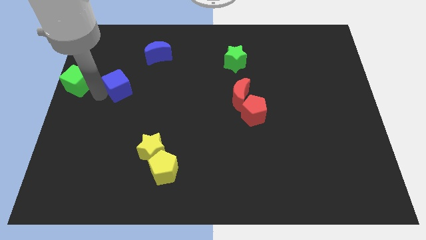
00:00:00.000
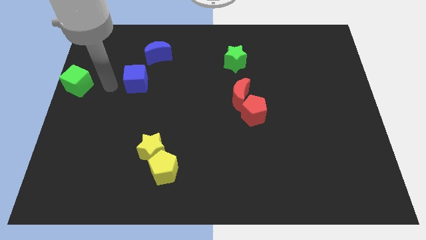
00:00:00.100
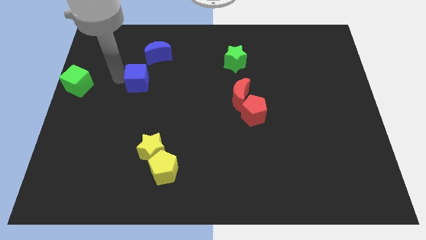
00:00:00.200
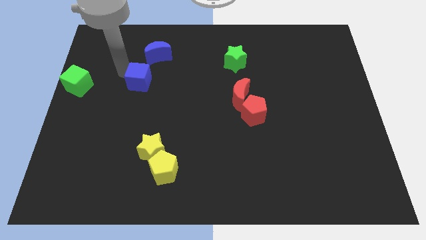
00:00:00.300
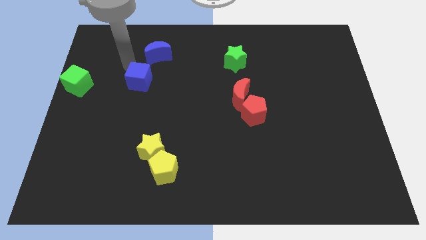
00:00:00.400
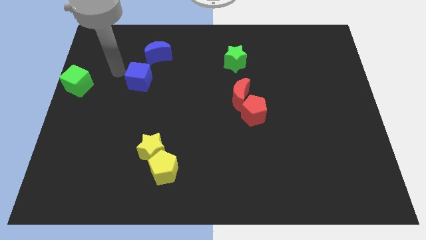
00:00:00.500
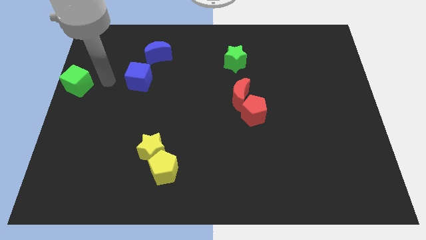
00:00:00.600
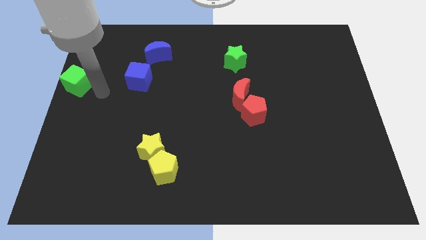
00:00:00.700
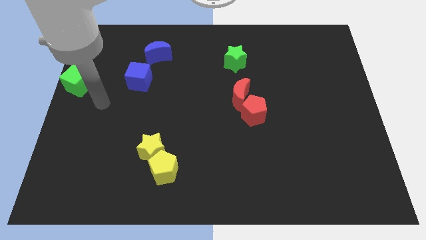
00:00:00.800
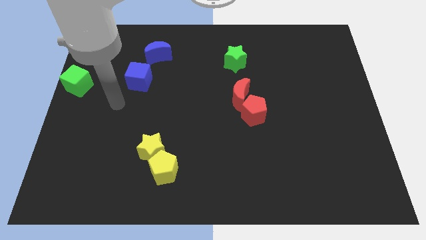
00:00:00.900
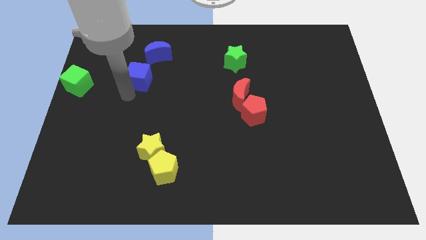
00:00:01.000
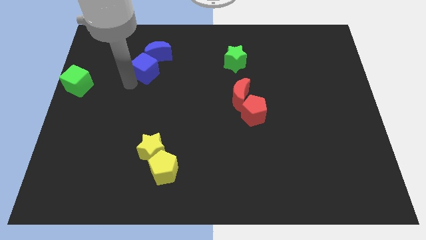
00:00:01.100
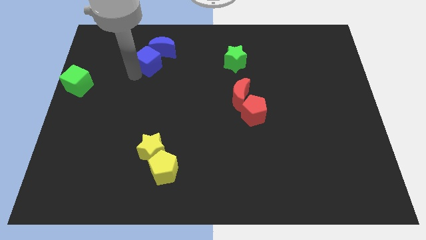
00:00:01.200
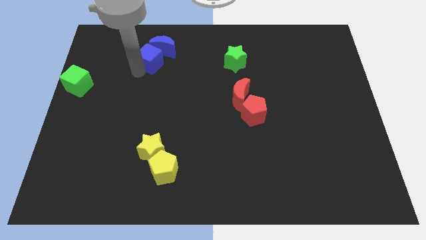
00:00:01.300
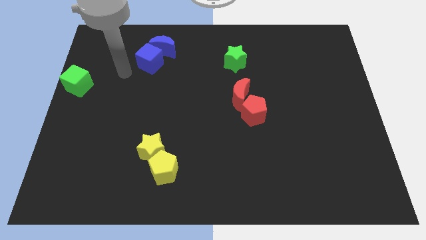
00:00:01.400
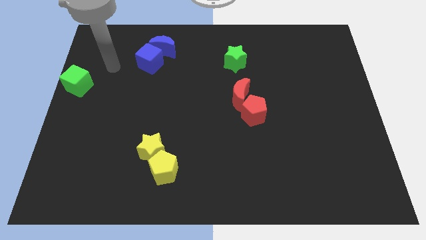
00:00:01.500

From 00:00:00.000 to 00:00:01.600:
push the blue cube into blue crescent

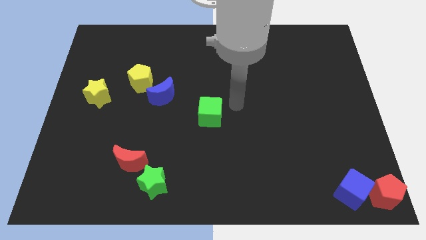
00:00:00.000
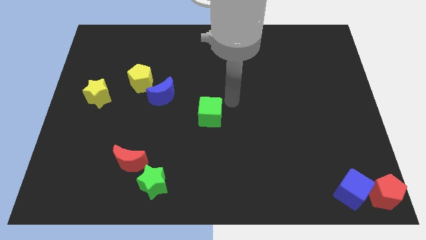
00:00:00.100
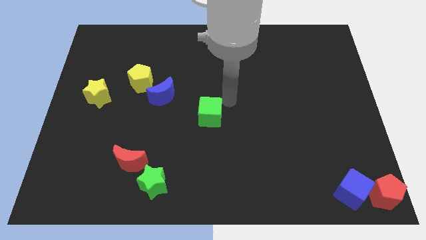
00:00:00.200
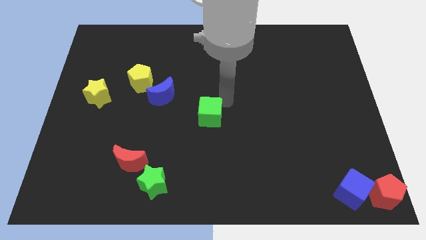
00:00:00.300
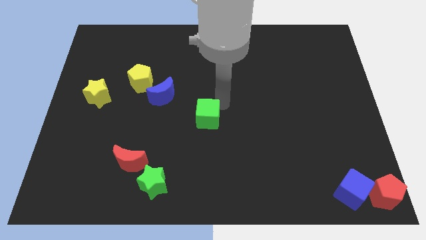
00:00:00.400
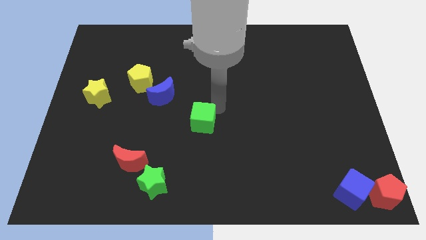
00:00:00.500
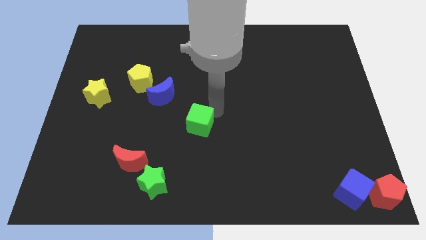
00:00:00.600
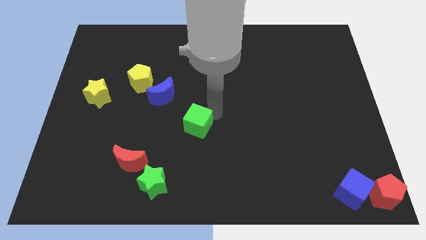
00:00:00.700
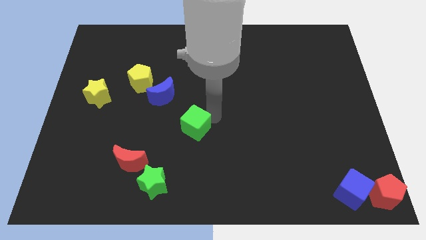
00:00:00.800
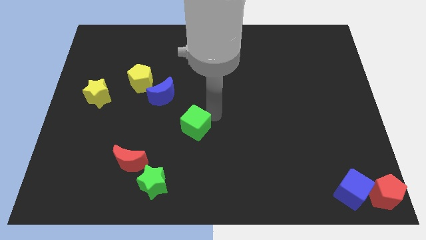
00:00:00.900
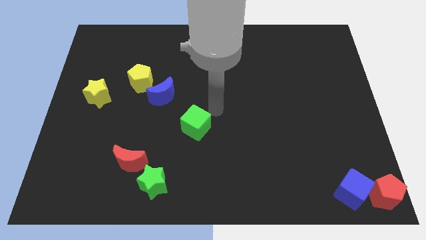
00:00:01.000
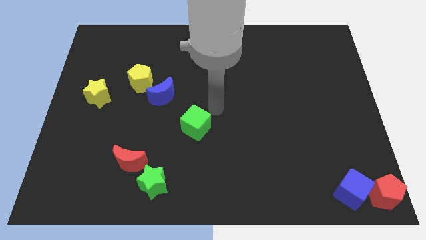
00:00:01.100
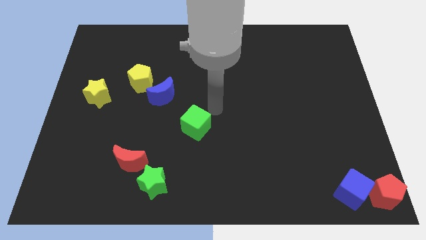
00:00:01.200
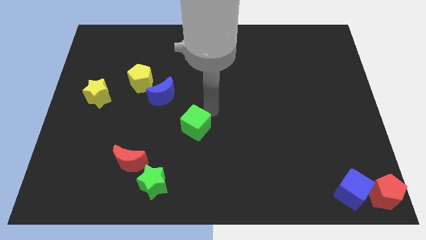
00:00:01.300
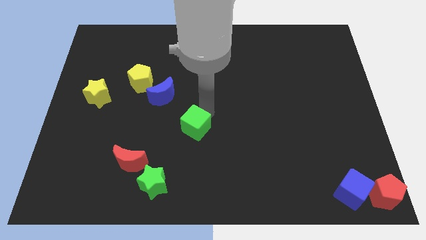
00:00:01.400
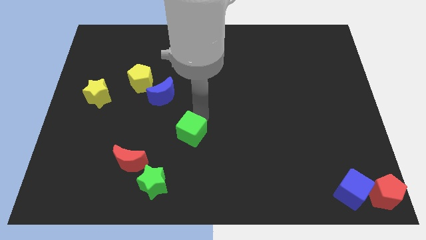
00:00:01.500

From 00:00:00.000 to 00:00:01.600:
push the green cube towards the green star

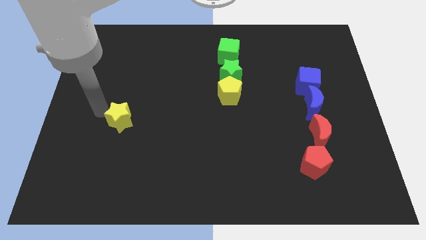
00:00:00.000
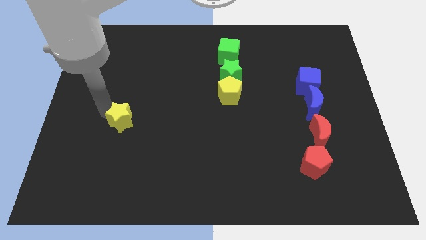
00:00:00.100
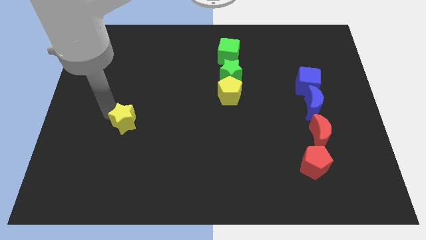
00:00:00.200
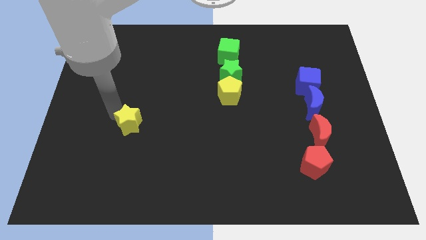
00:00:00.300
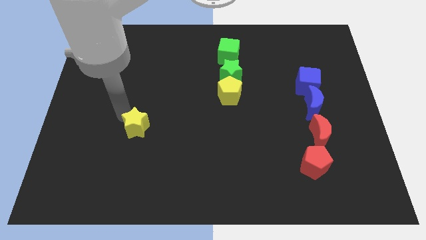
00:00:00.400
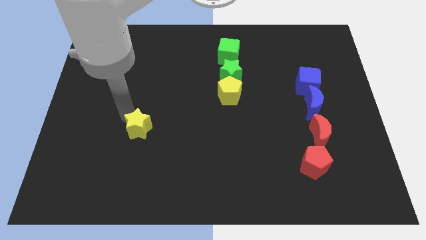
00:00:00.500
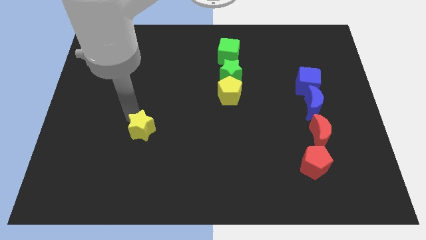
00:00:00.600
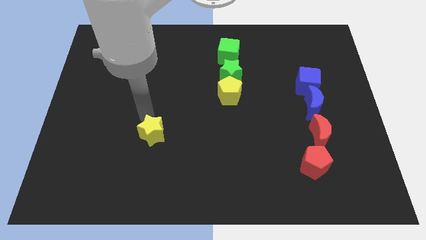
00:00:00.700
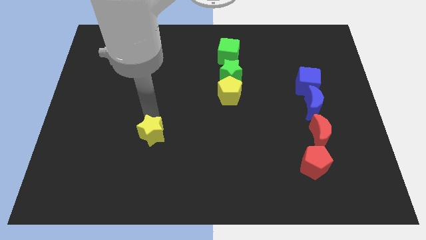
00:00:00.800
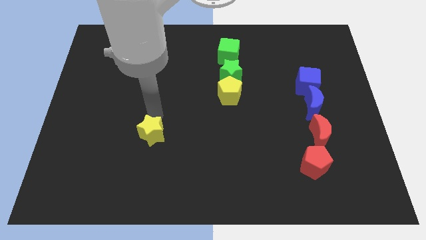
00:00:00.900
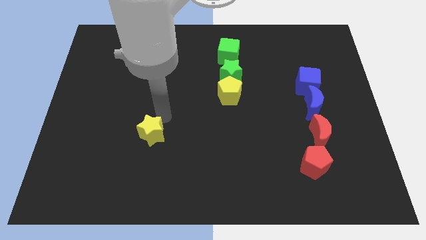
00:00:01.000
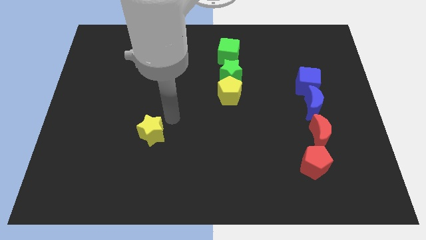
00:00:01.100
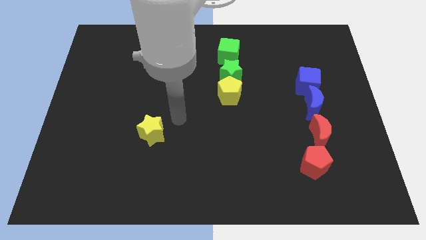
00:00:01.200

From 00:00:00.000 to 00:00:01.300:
push the yellow star slightly to the bottom

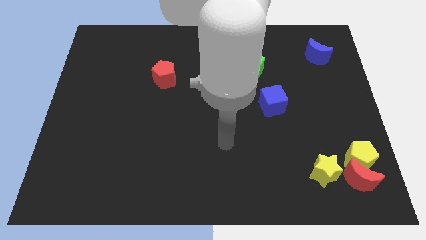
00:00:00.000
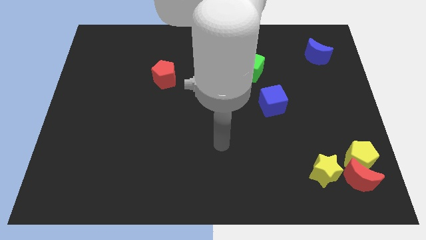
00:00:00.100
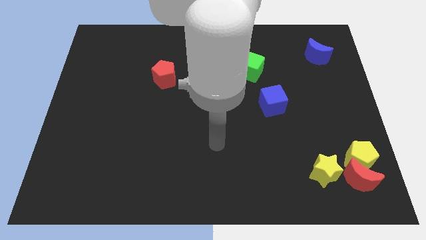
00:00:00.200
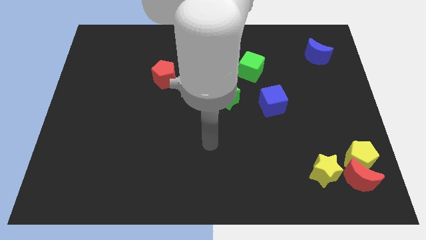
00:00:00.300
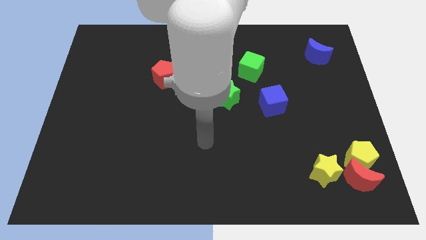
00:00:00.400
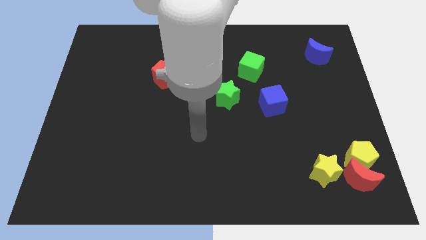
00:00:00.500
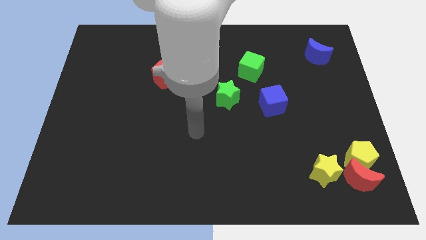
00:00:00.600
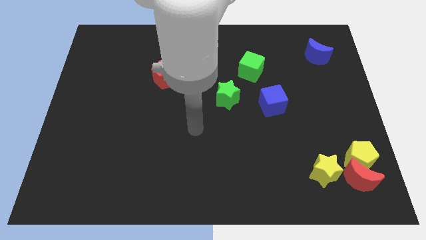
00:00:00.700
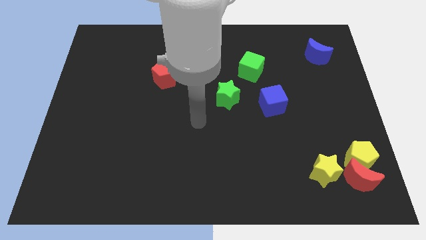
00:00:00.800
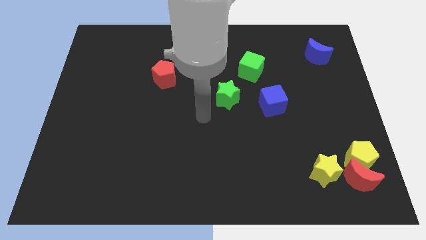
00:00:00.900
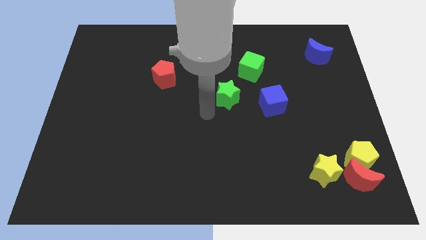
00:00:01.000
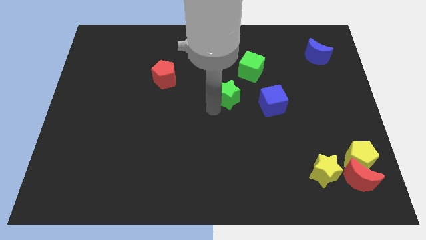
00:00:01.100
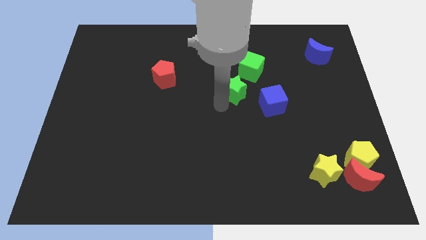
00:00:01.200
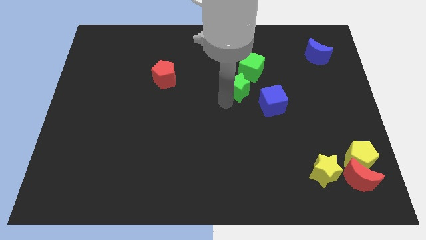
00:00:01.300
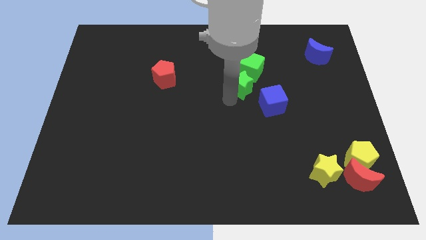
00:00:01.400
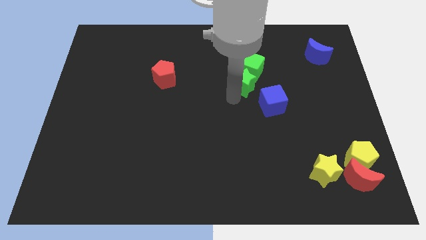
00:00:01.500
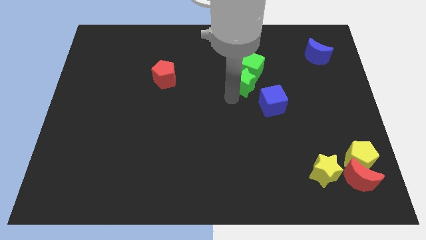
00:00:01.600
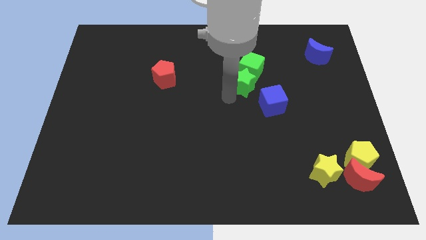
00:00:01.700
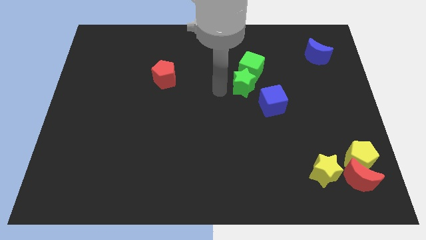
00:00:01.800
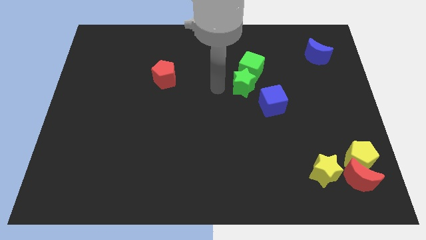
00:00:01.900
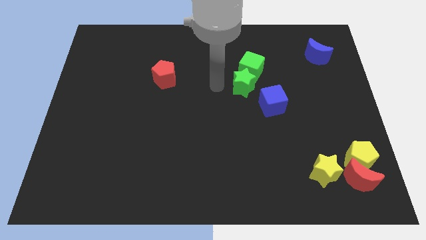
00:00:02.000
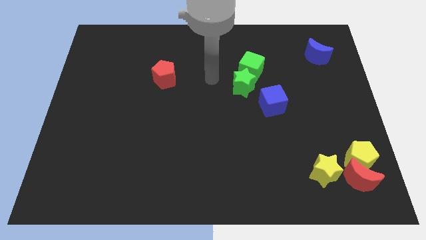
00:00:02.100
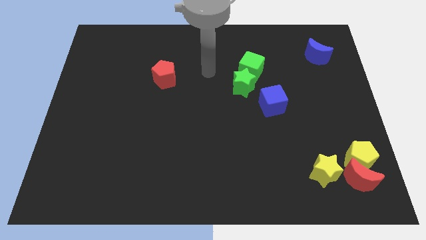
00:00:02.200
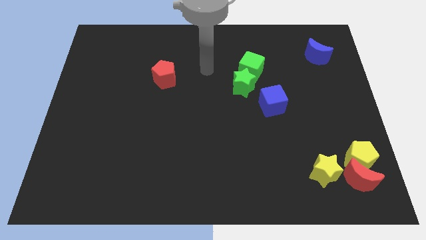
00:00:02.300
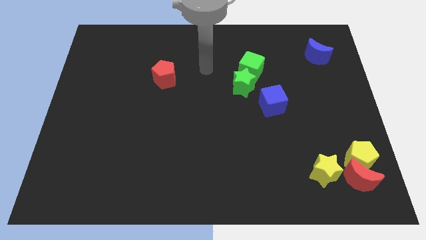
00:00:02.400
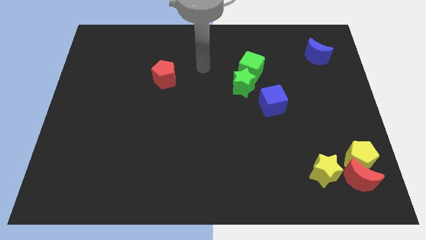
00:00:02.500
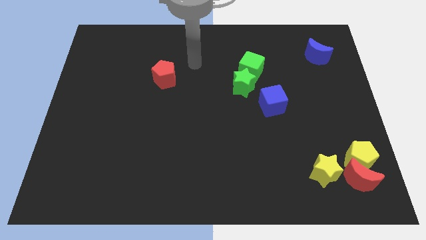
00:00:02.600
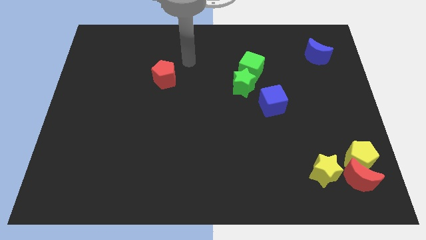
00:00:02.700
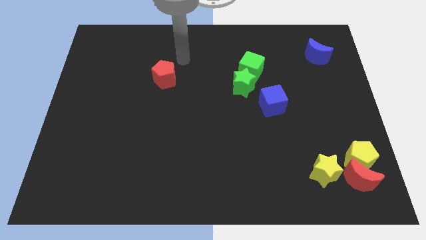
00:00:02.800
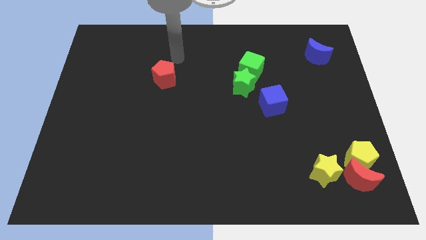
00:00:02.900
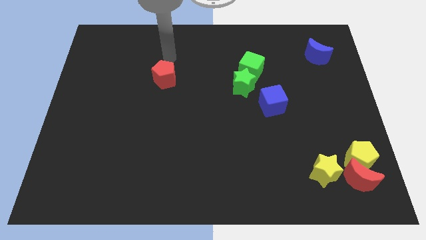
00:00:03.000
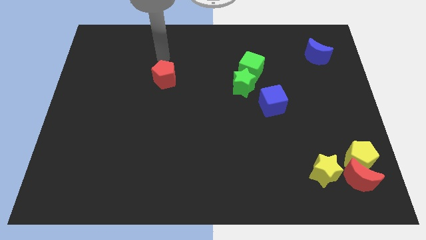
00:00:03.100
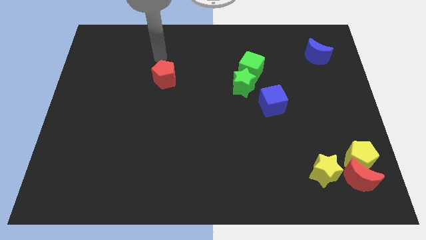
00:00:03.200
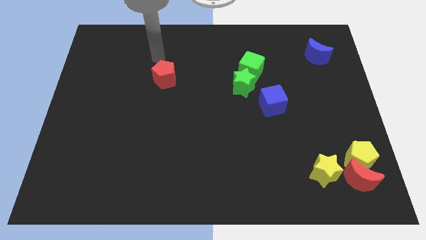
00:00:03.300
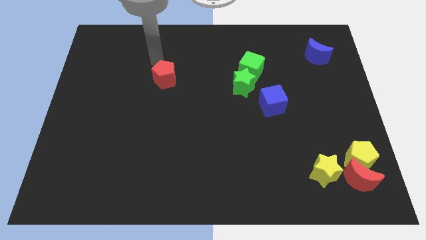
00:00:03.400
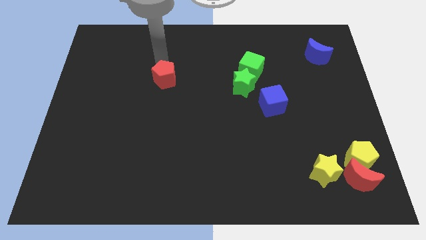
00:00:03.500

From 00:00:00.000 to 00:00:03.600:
move green star into green cube

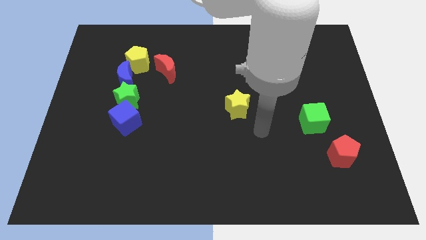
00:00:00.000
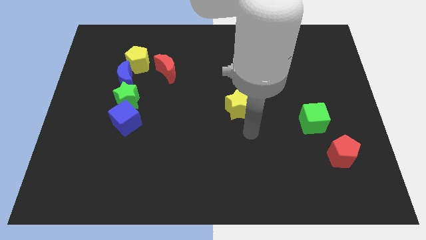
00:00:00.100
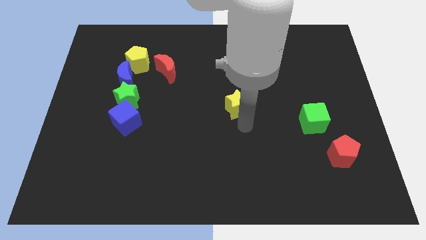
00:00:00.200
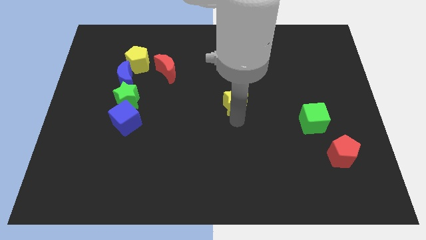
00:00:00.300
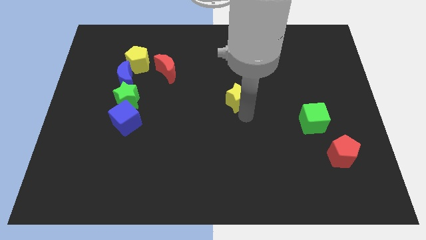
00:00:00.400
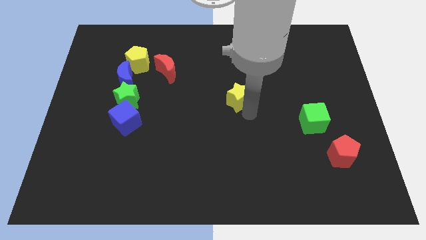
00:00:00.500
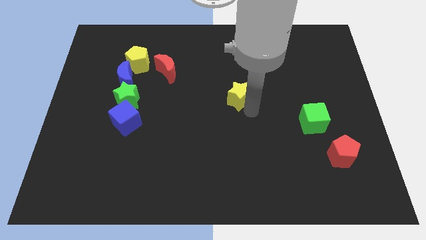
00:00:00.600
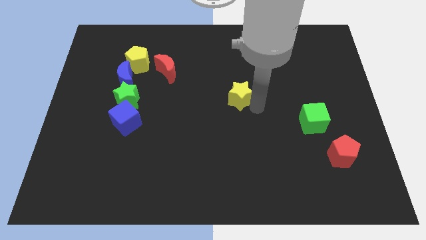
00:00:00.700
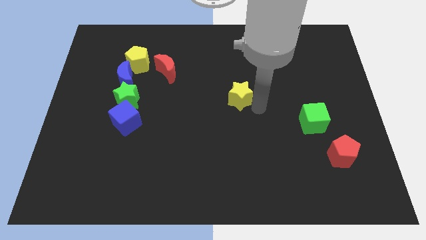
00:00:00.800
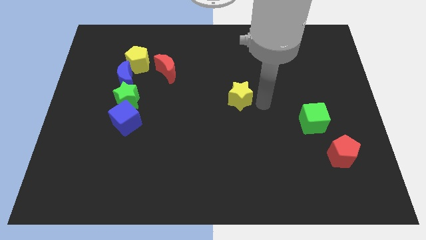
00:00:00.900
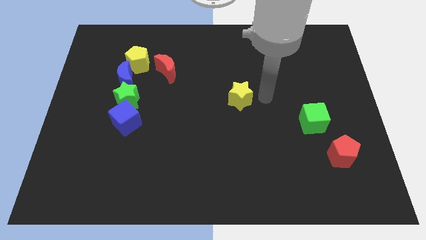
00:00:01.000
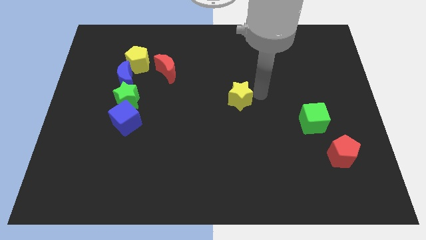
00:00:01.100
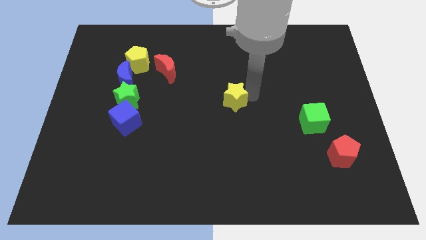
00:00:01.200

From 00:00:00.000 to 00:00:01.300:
push the yellow star slightly to the top of the board
